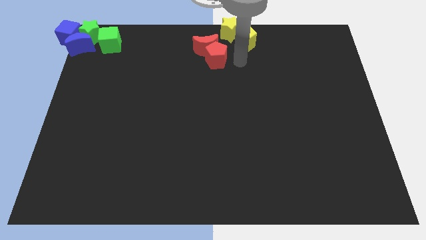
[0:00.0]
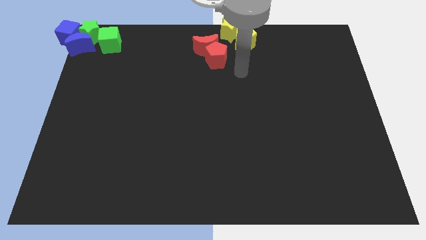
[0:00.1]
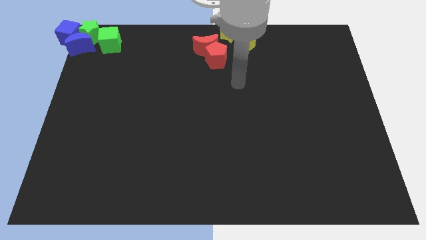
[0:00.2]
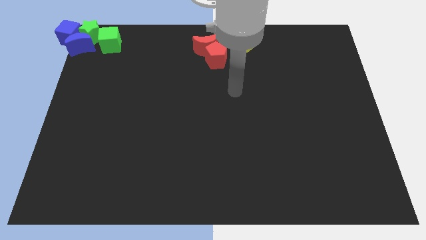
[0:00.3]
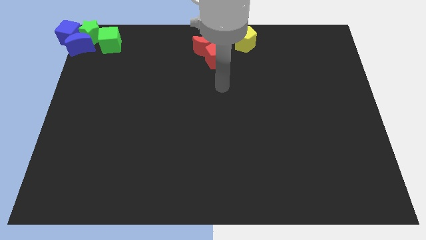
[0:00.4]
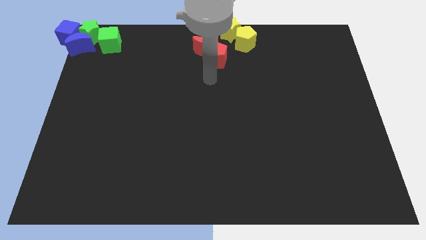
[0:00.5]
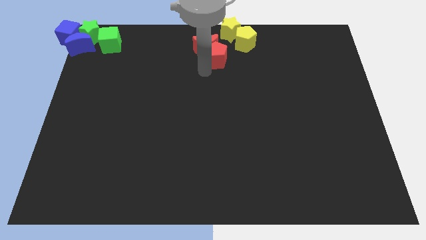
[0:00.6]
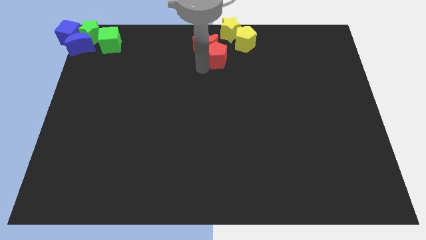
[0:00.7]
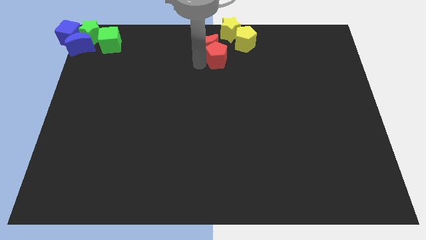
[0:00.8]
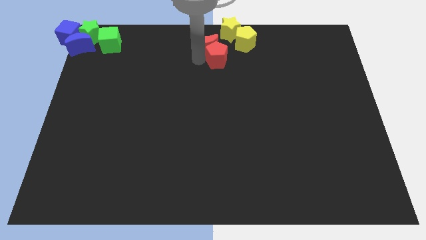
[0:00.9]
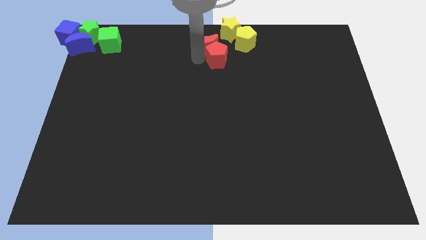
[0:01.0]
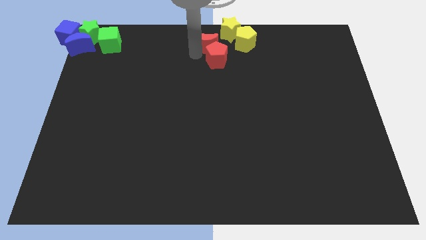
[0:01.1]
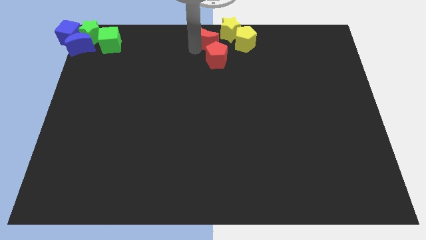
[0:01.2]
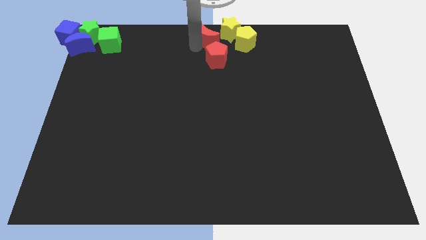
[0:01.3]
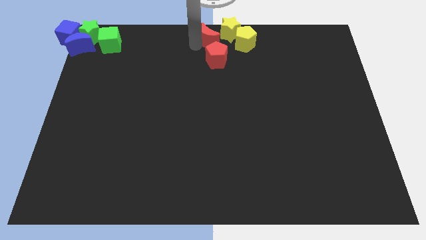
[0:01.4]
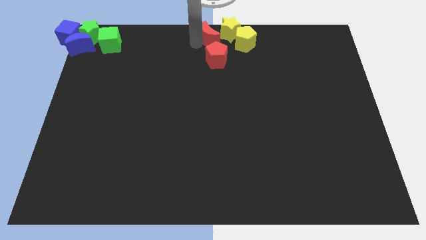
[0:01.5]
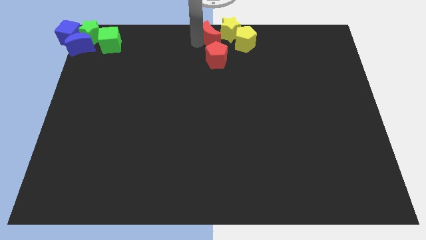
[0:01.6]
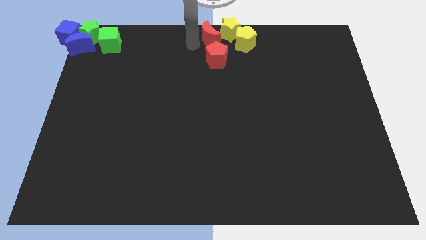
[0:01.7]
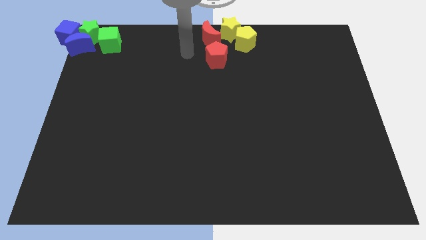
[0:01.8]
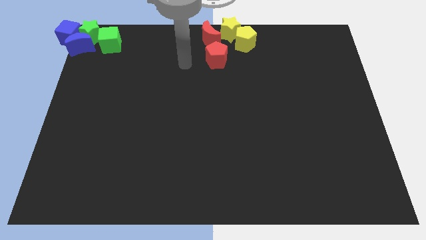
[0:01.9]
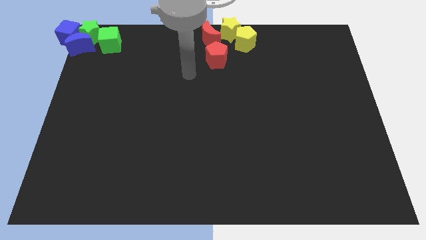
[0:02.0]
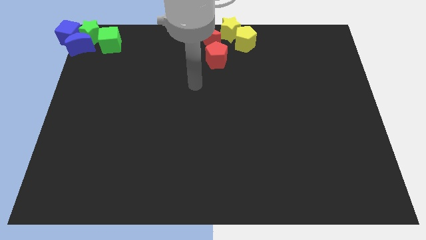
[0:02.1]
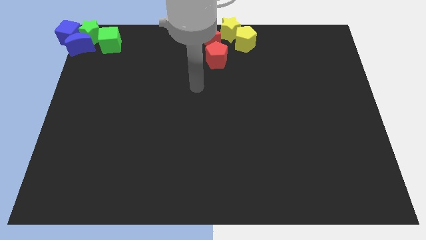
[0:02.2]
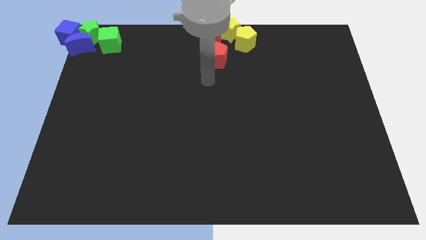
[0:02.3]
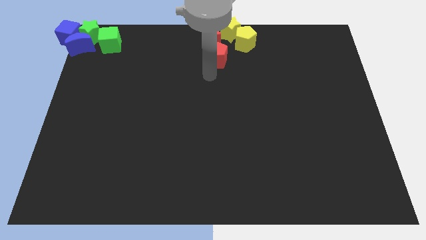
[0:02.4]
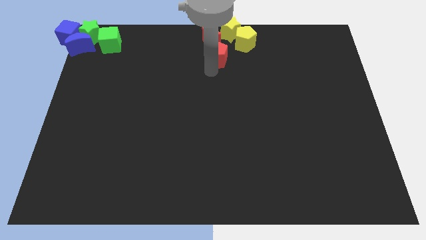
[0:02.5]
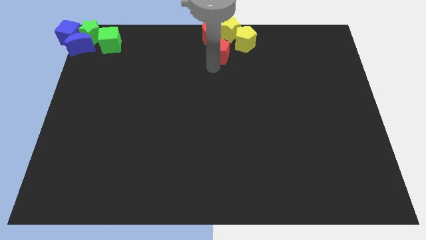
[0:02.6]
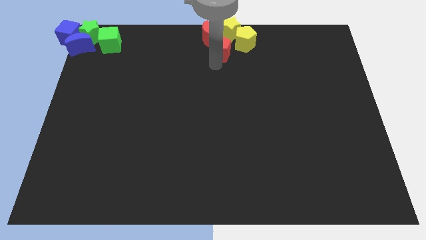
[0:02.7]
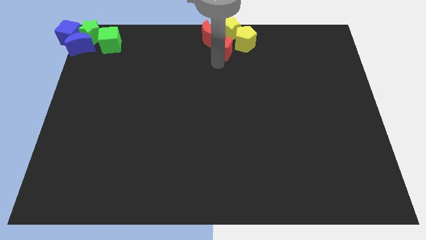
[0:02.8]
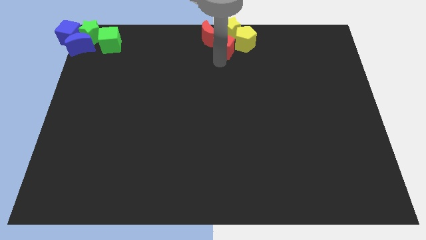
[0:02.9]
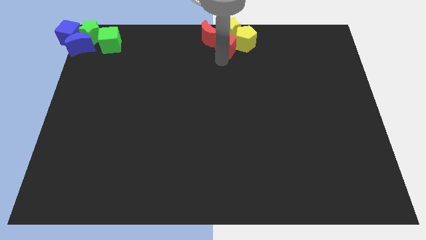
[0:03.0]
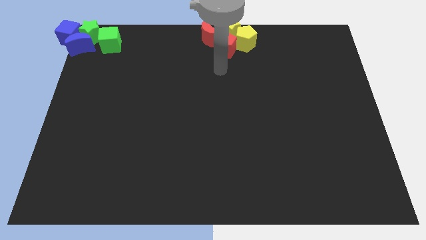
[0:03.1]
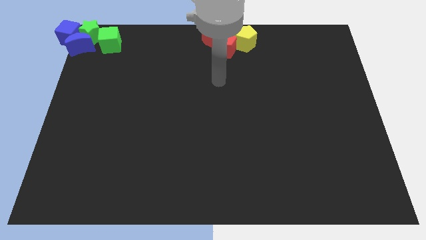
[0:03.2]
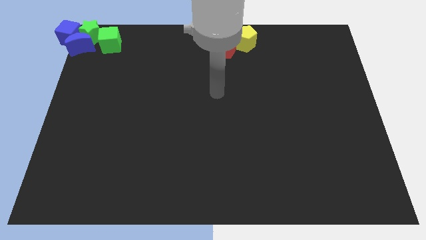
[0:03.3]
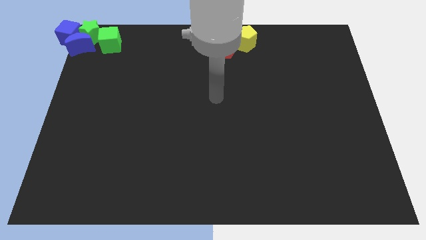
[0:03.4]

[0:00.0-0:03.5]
place the red blocks into yellow blocks

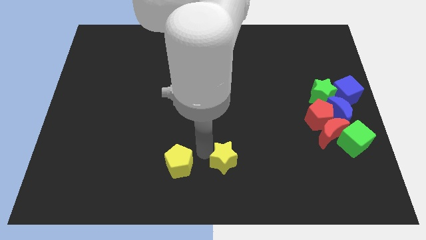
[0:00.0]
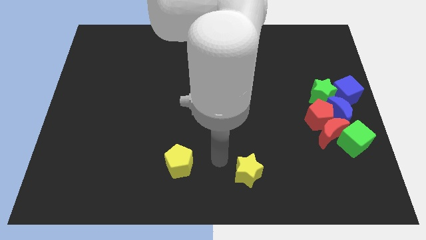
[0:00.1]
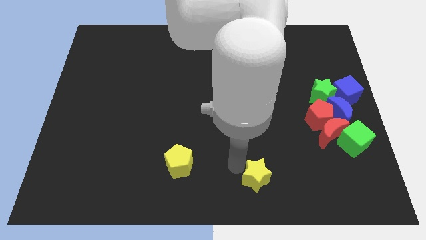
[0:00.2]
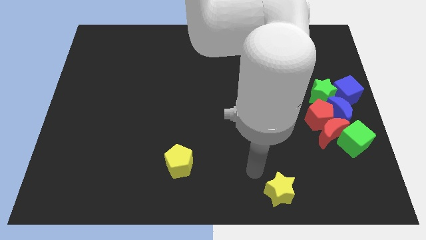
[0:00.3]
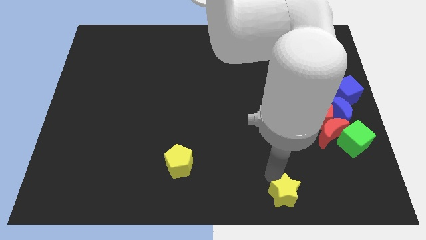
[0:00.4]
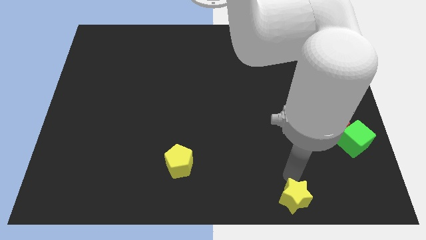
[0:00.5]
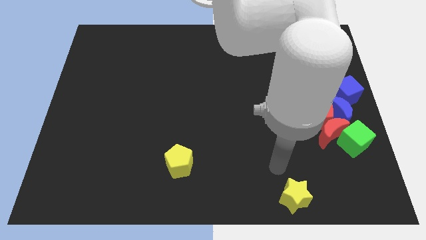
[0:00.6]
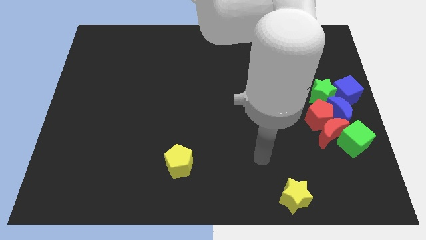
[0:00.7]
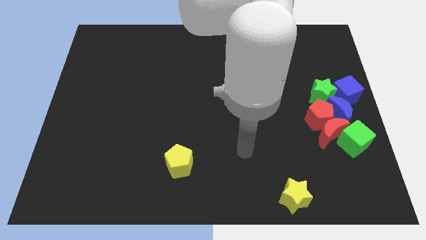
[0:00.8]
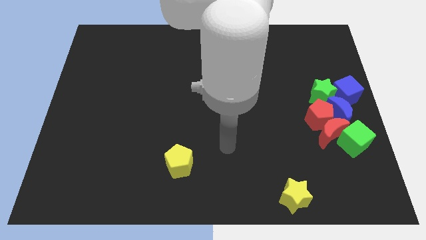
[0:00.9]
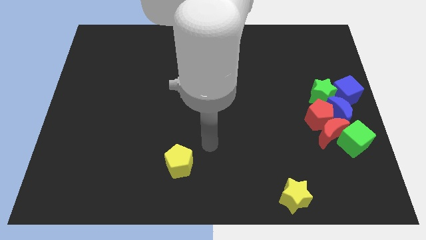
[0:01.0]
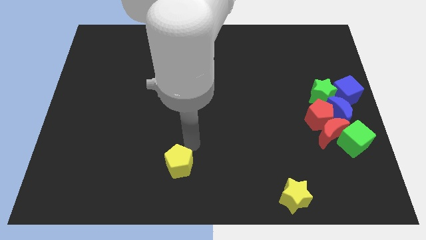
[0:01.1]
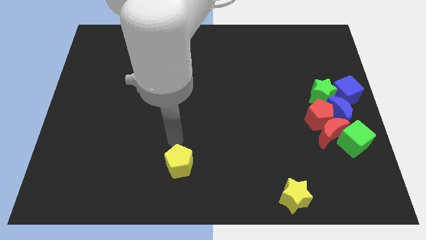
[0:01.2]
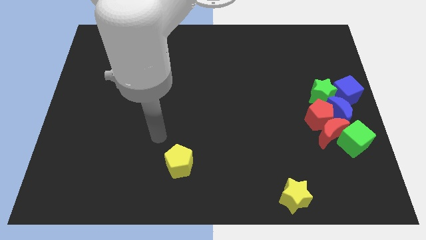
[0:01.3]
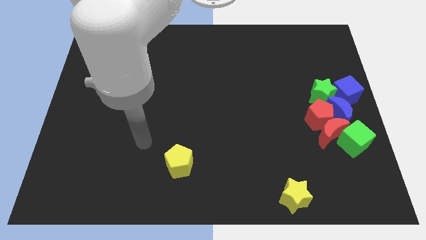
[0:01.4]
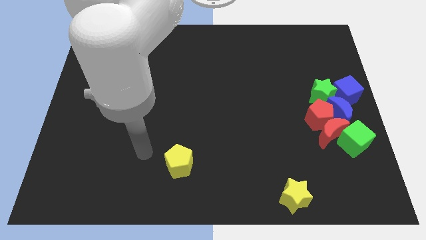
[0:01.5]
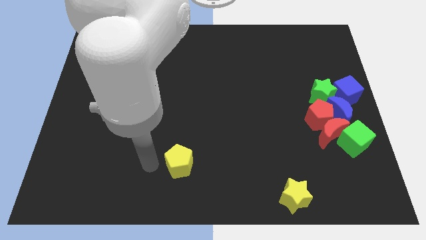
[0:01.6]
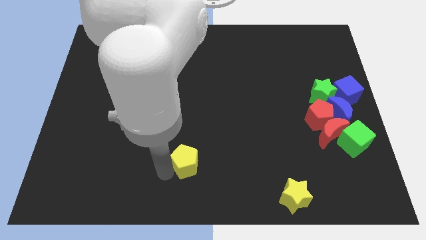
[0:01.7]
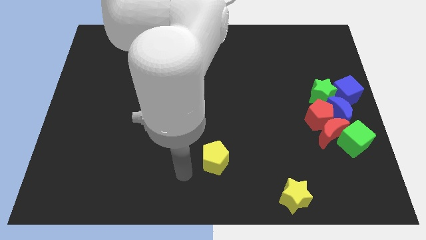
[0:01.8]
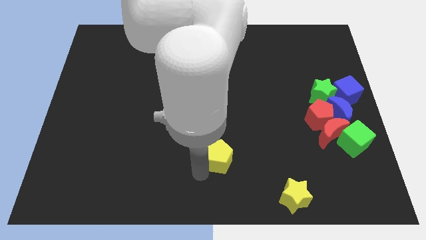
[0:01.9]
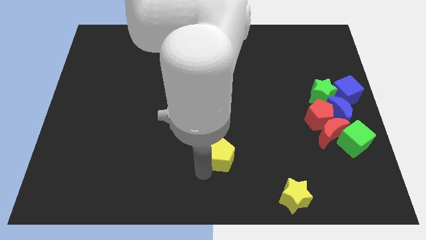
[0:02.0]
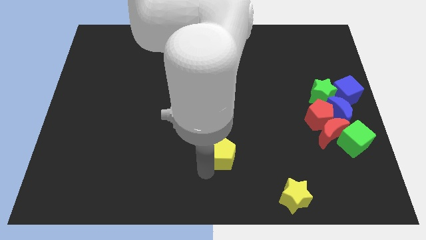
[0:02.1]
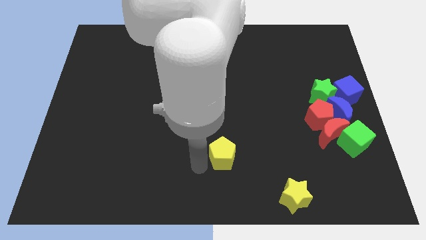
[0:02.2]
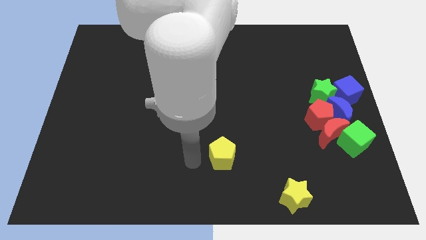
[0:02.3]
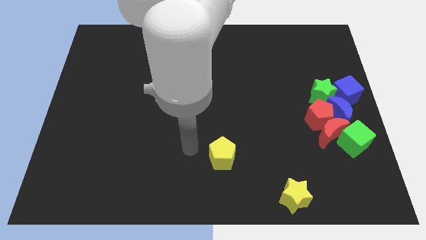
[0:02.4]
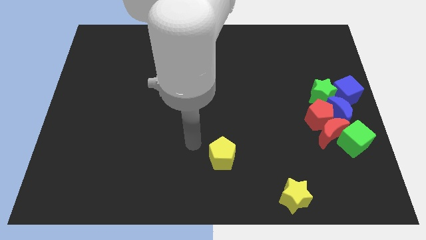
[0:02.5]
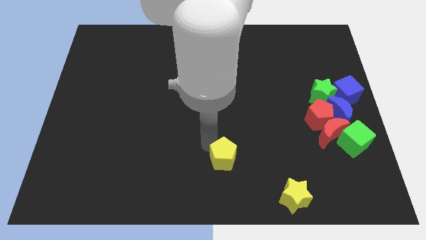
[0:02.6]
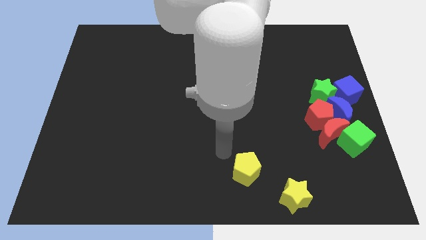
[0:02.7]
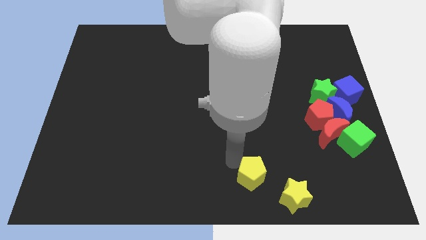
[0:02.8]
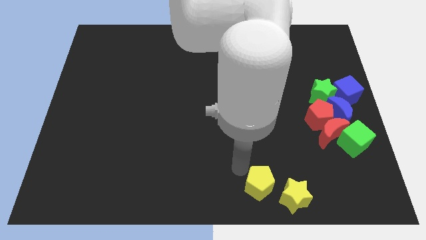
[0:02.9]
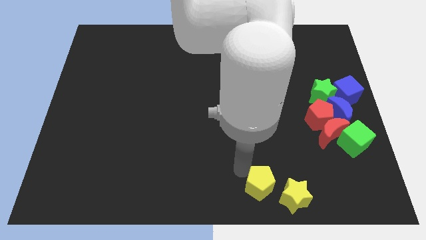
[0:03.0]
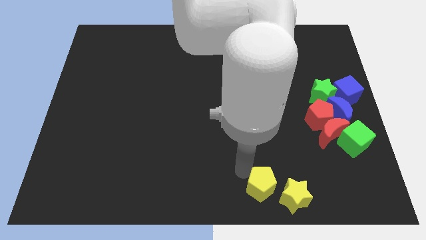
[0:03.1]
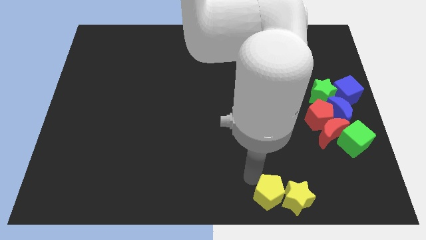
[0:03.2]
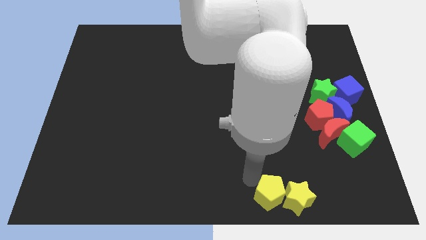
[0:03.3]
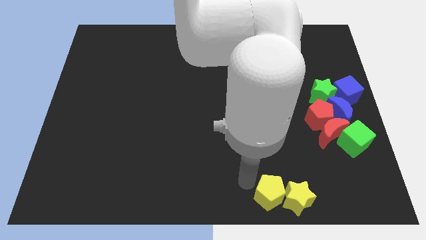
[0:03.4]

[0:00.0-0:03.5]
put yellow blocks together

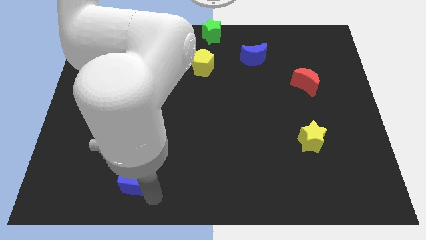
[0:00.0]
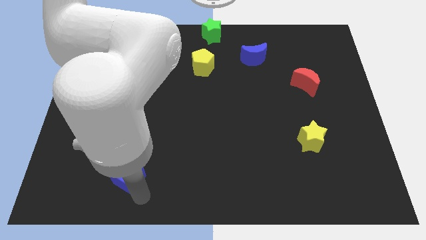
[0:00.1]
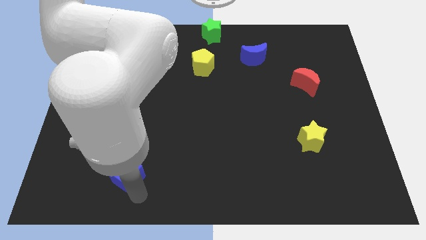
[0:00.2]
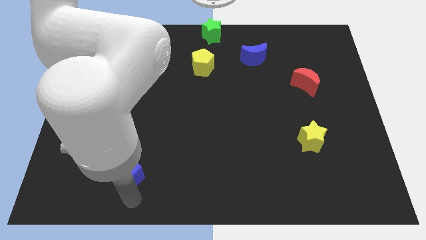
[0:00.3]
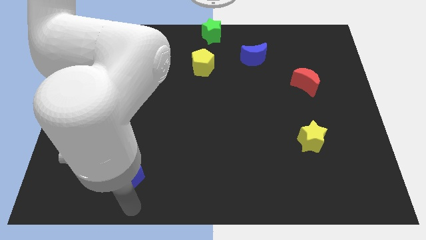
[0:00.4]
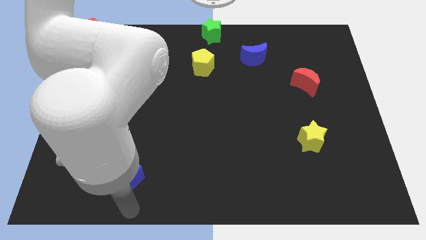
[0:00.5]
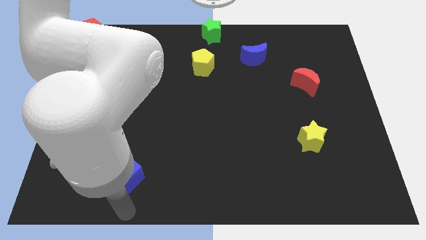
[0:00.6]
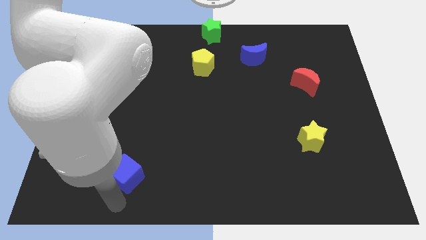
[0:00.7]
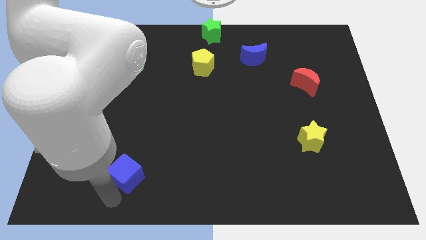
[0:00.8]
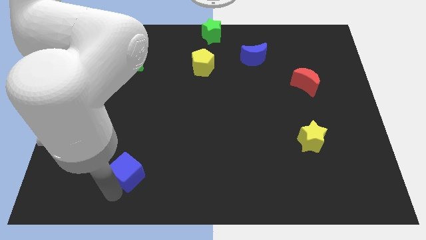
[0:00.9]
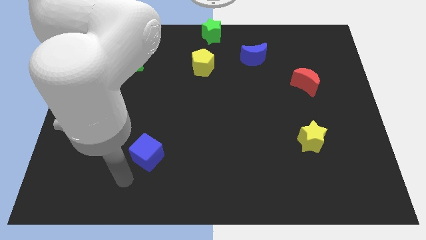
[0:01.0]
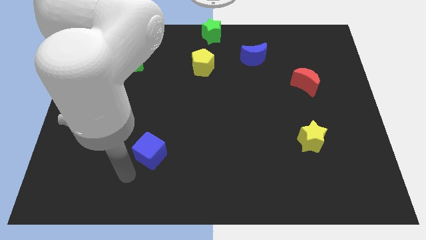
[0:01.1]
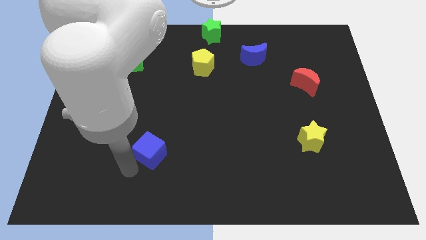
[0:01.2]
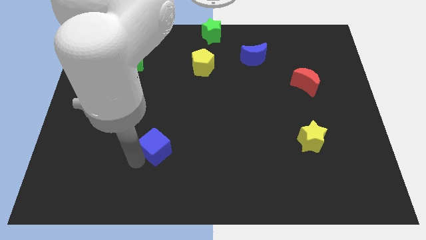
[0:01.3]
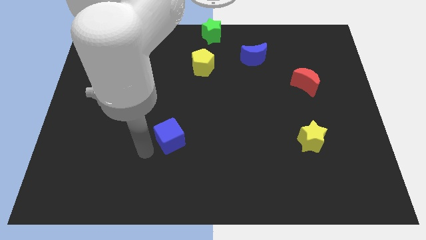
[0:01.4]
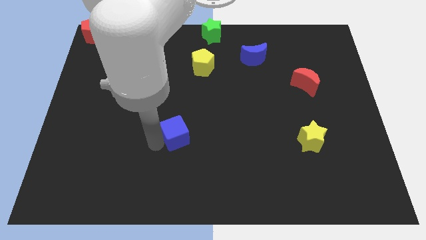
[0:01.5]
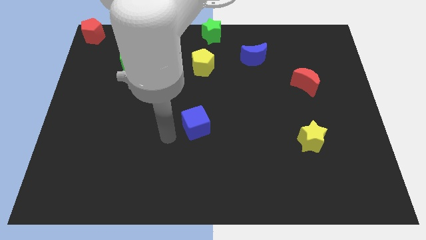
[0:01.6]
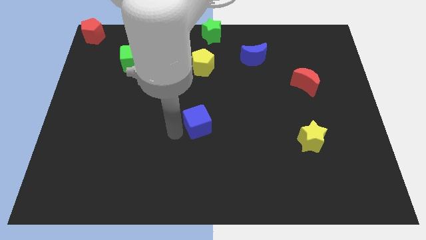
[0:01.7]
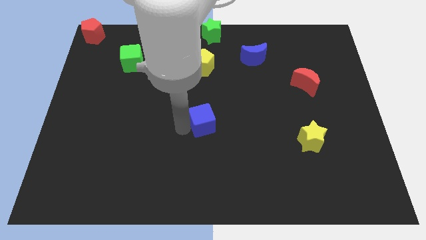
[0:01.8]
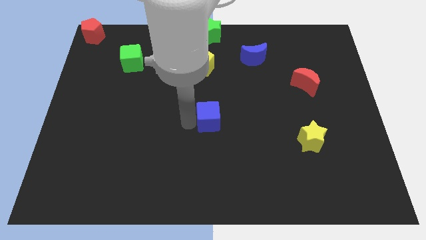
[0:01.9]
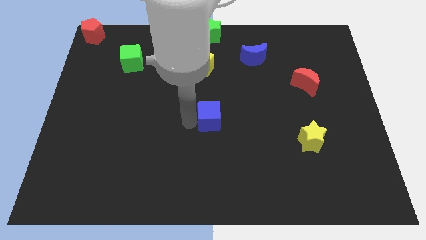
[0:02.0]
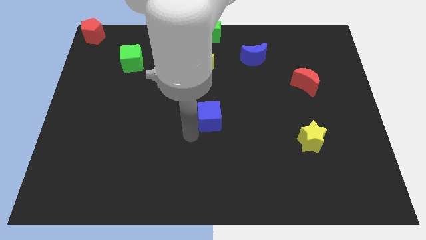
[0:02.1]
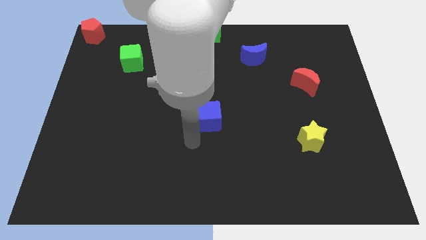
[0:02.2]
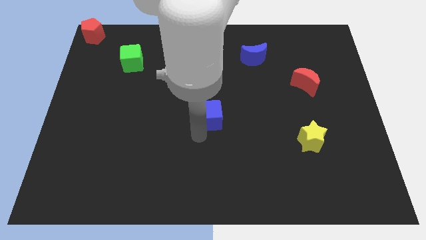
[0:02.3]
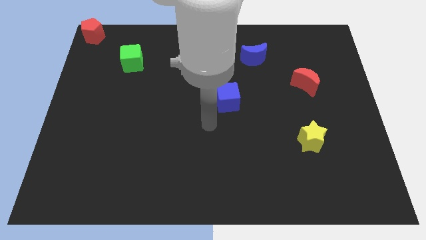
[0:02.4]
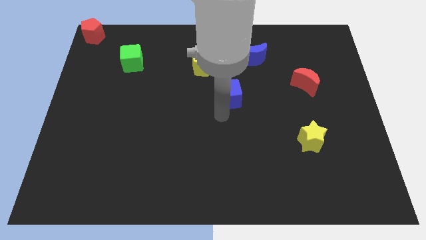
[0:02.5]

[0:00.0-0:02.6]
place the blue cube diagonally to yellow star
